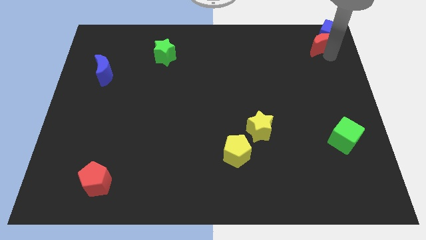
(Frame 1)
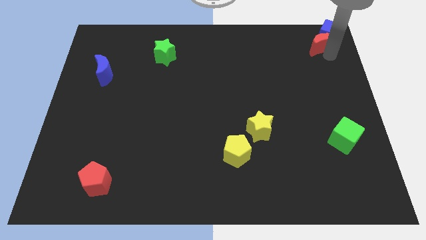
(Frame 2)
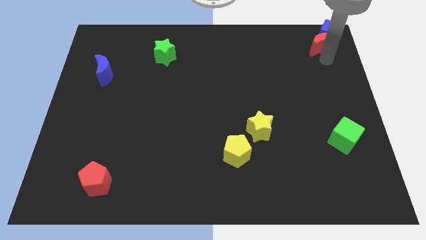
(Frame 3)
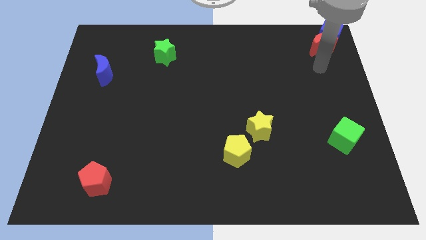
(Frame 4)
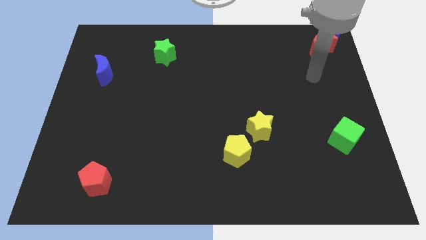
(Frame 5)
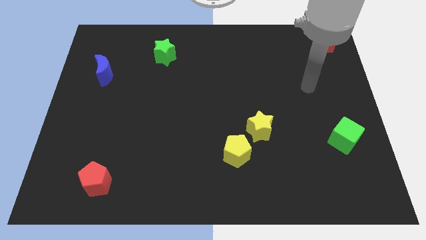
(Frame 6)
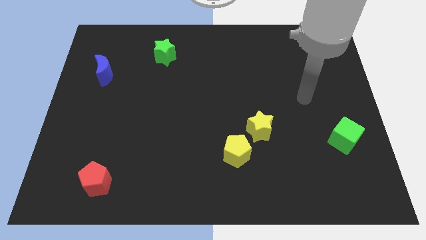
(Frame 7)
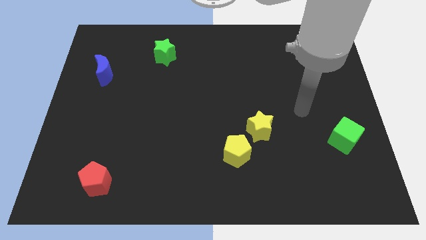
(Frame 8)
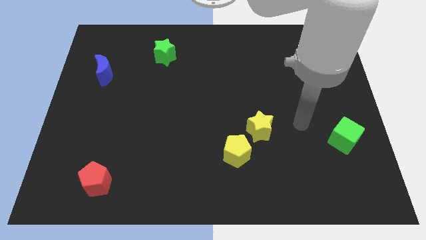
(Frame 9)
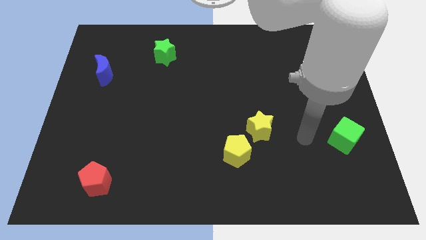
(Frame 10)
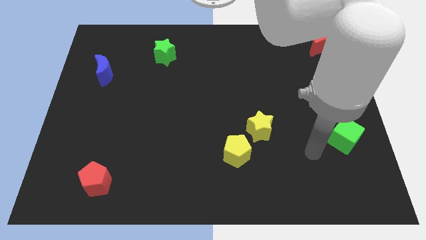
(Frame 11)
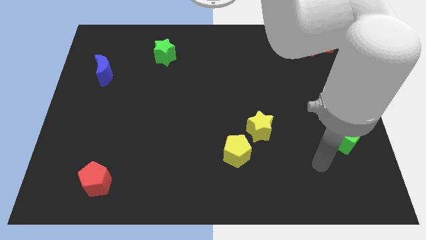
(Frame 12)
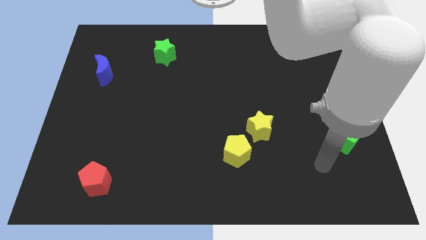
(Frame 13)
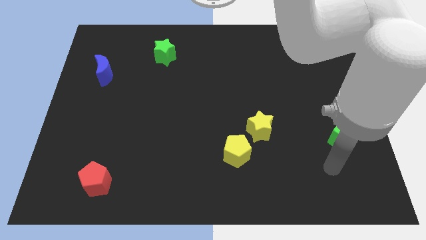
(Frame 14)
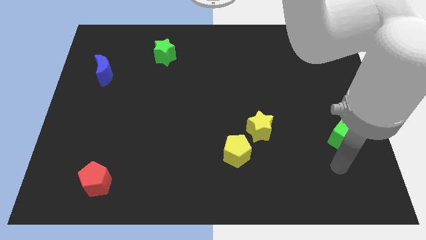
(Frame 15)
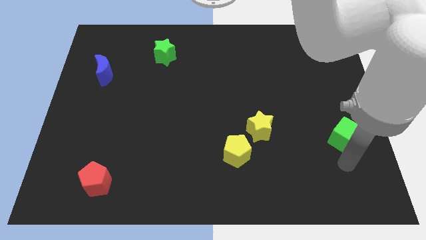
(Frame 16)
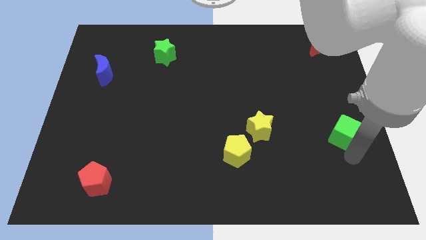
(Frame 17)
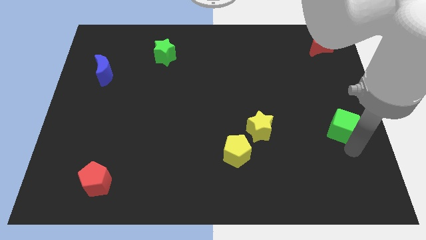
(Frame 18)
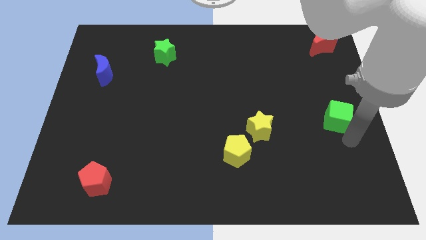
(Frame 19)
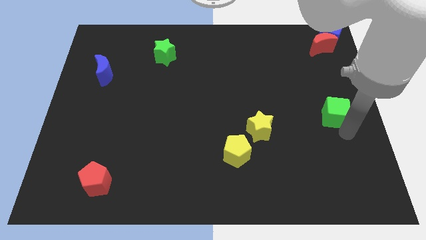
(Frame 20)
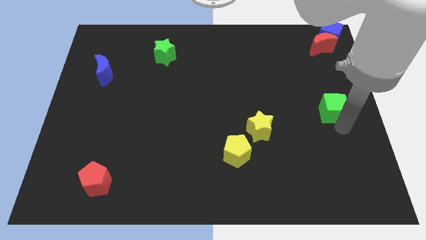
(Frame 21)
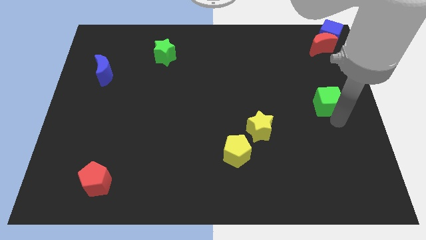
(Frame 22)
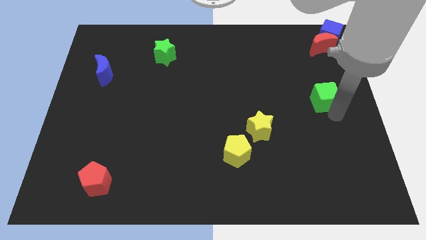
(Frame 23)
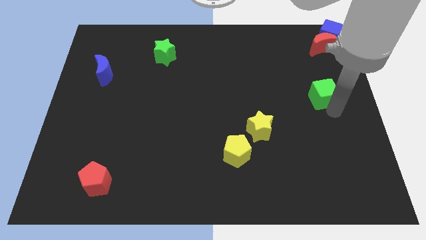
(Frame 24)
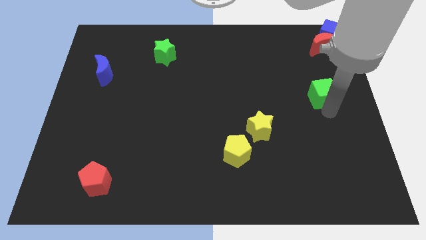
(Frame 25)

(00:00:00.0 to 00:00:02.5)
move your arm away from the red moon

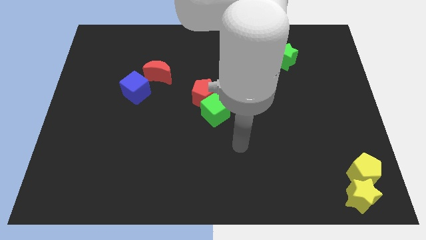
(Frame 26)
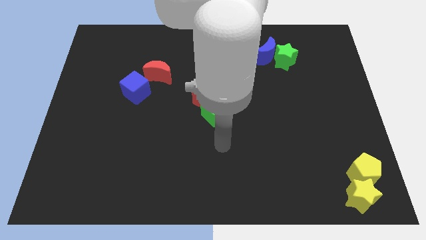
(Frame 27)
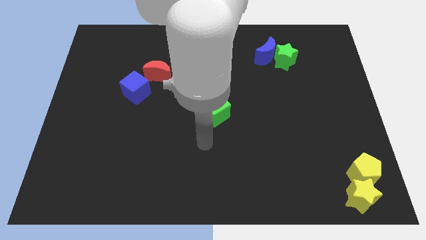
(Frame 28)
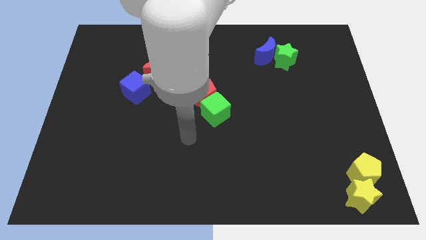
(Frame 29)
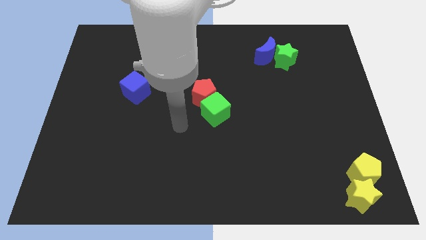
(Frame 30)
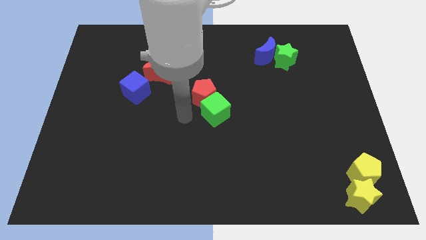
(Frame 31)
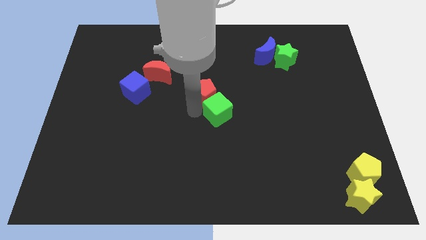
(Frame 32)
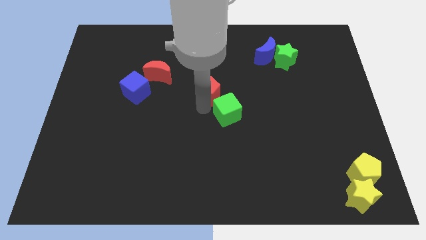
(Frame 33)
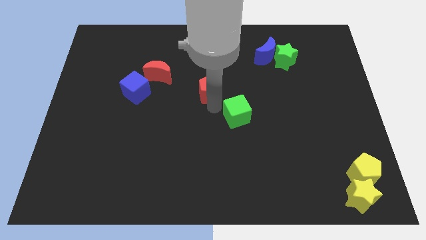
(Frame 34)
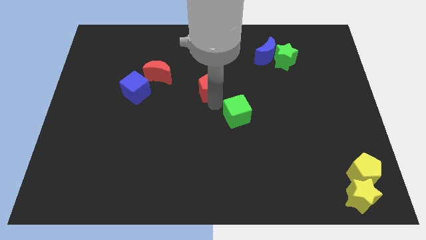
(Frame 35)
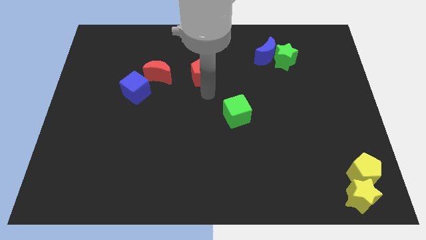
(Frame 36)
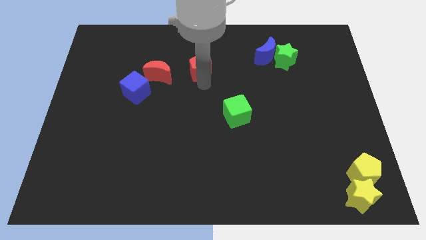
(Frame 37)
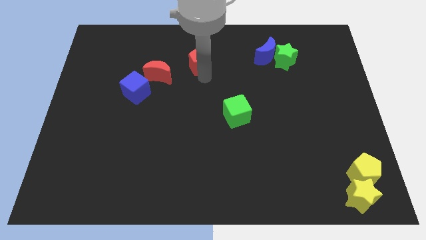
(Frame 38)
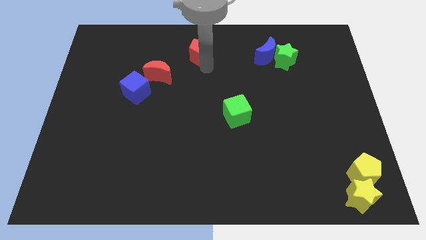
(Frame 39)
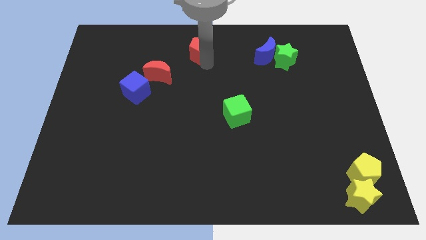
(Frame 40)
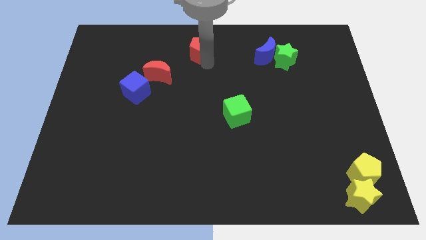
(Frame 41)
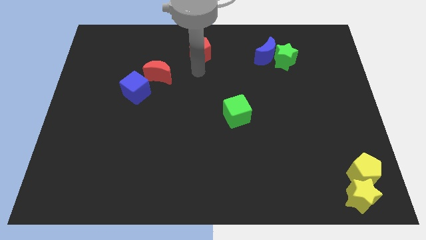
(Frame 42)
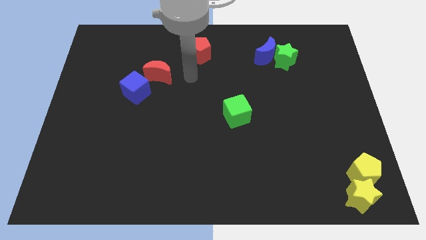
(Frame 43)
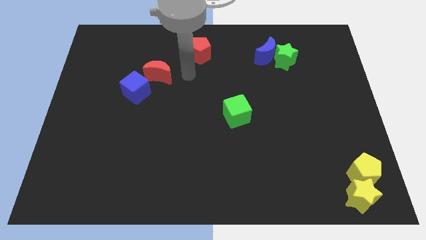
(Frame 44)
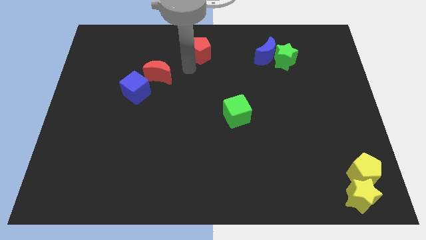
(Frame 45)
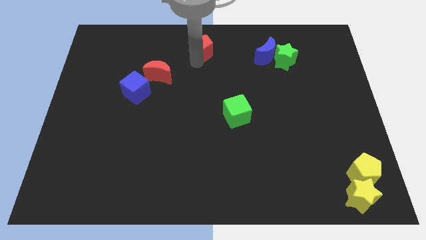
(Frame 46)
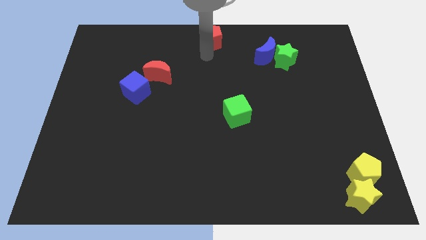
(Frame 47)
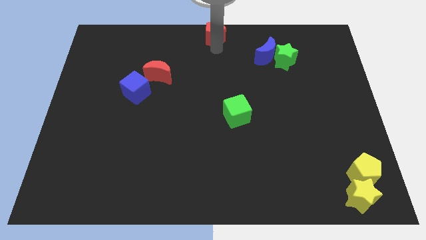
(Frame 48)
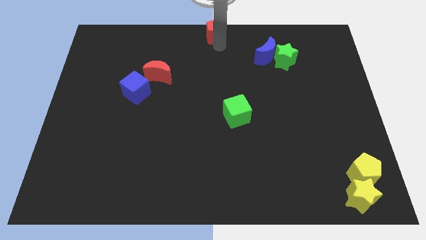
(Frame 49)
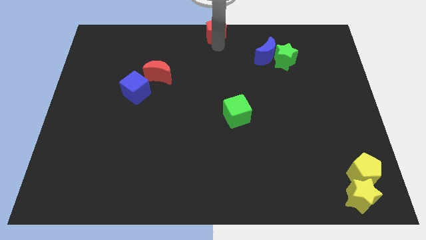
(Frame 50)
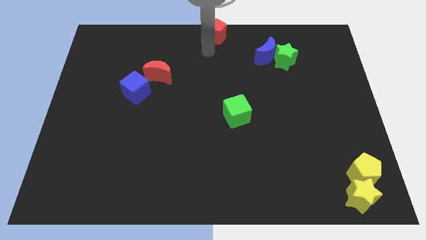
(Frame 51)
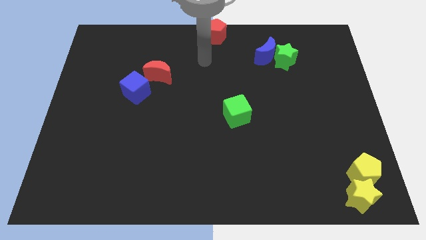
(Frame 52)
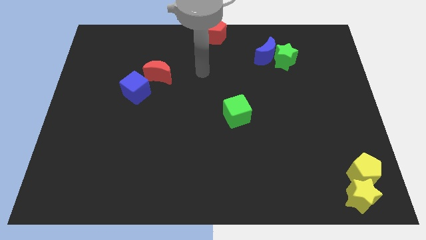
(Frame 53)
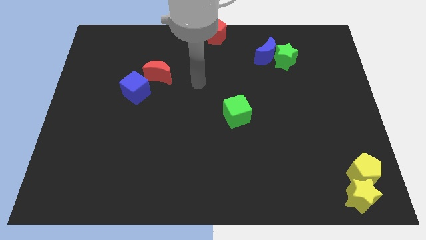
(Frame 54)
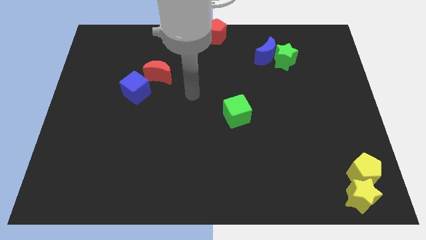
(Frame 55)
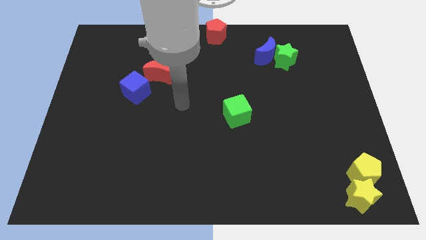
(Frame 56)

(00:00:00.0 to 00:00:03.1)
place the red pentagon to the top center

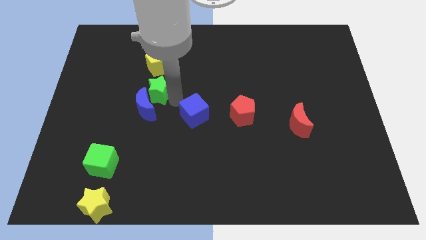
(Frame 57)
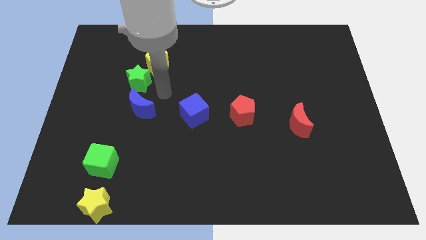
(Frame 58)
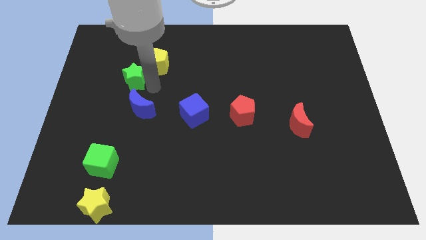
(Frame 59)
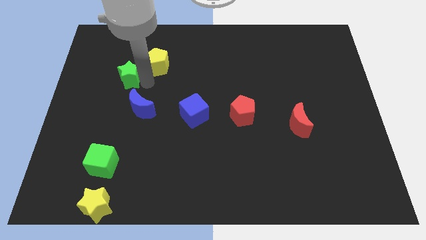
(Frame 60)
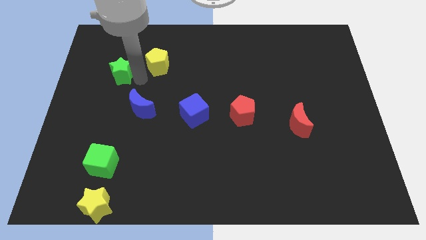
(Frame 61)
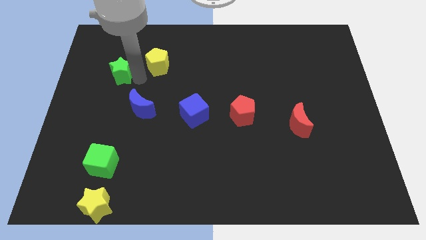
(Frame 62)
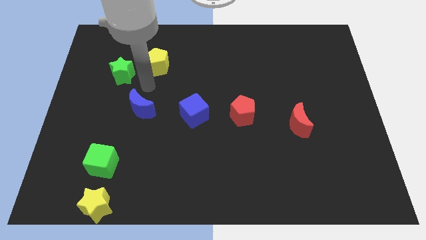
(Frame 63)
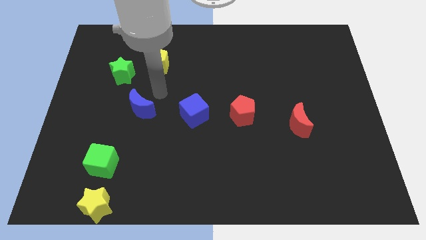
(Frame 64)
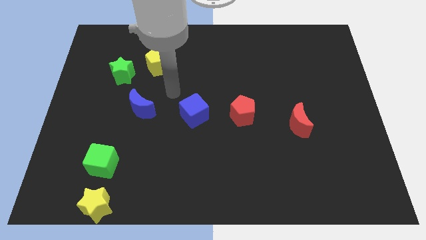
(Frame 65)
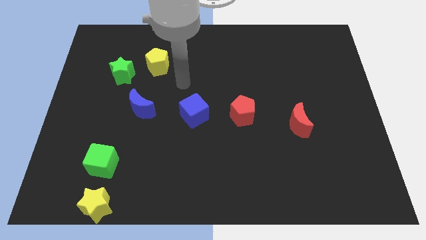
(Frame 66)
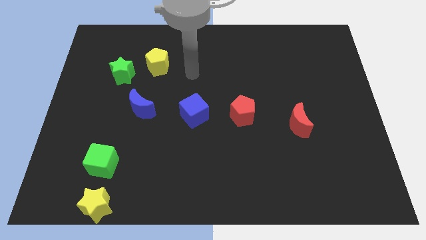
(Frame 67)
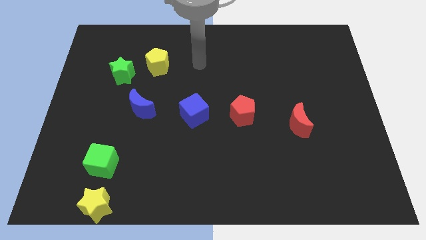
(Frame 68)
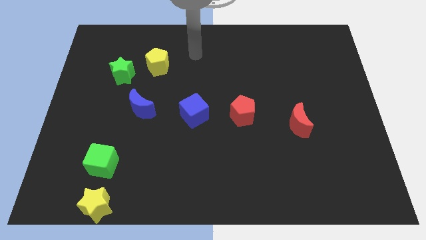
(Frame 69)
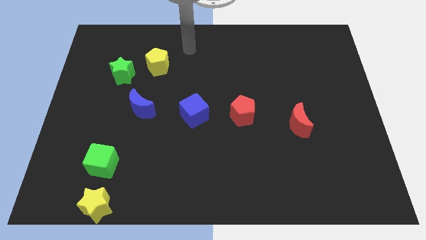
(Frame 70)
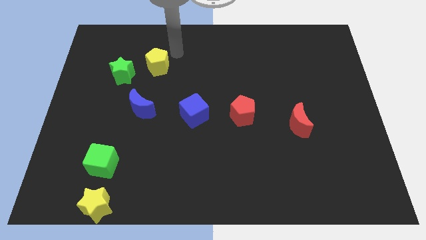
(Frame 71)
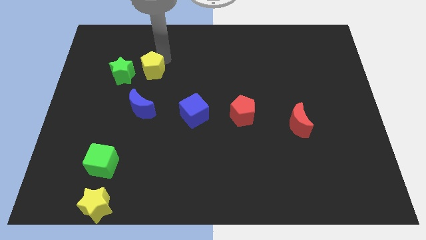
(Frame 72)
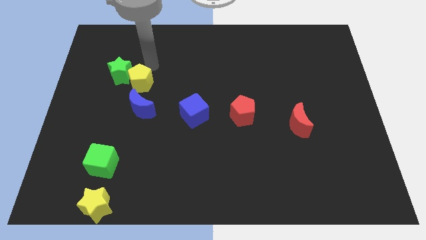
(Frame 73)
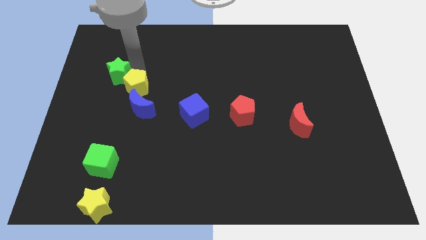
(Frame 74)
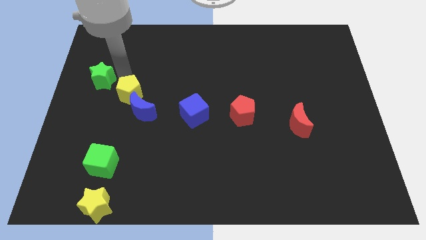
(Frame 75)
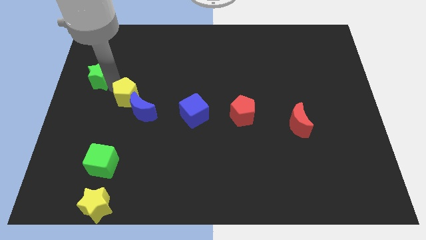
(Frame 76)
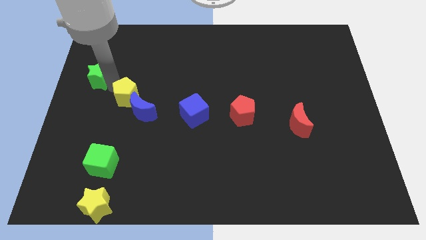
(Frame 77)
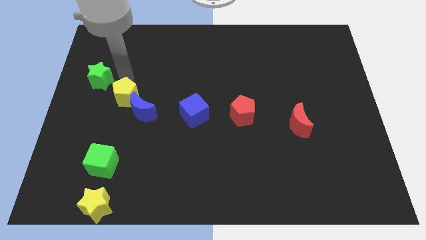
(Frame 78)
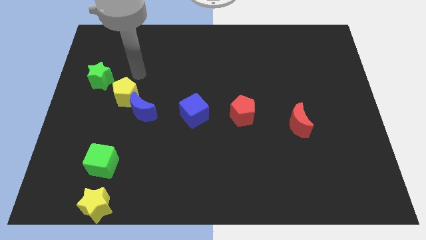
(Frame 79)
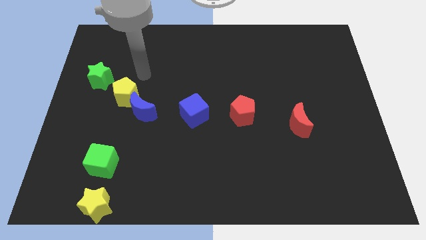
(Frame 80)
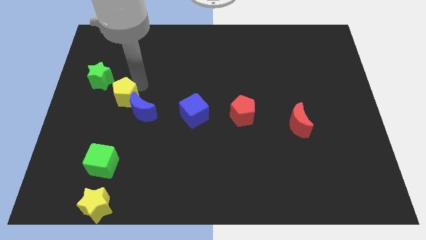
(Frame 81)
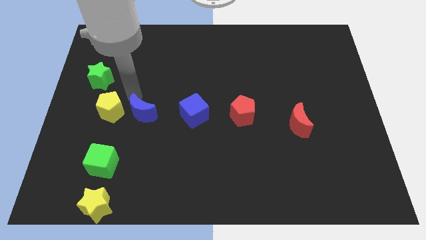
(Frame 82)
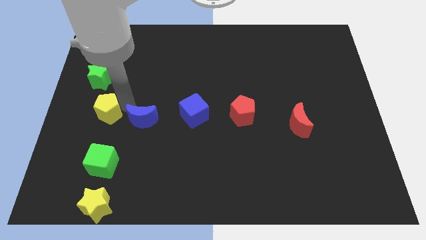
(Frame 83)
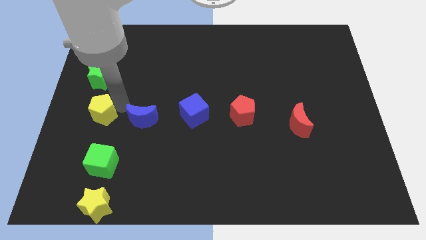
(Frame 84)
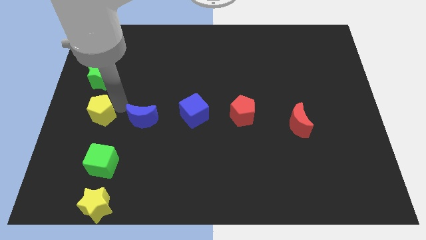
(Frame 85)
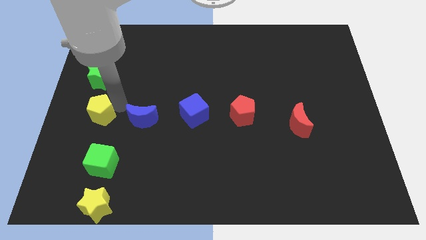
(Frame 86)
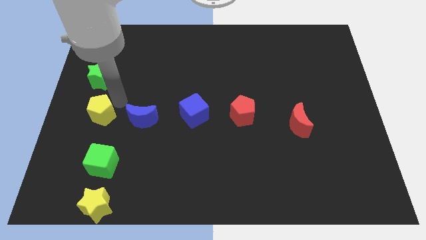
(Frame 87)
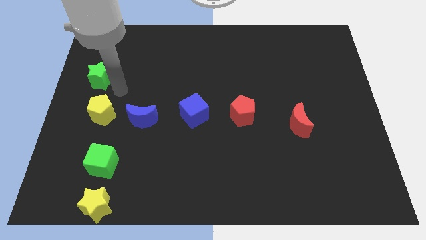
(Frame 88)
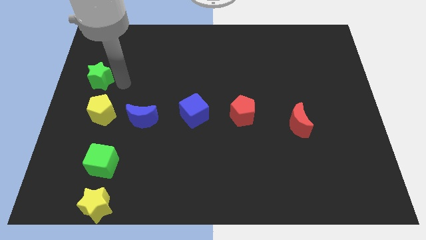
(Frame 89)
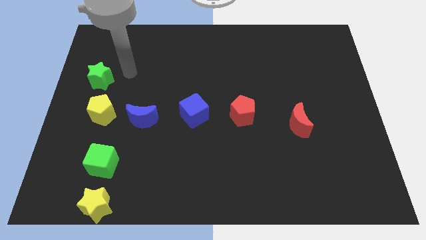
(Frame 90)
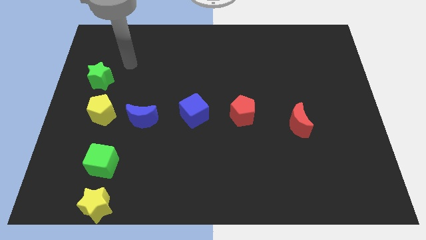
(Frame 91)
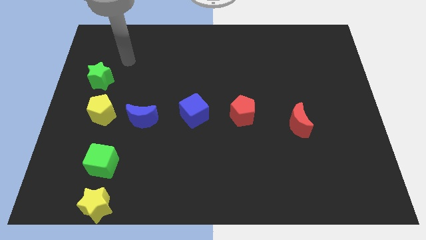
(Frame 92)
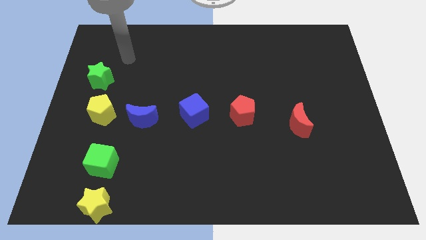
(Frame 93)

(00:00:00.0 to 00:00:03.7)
adjust the green star and the yellow pentagon to form a vertical line
